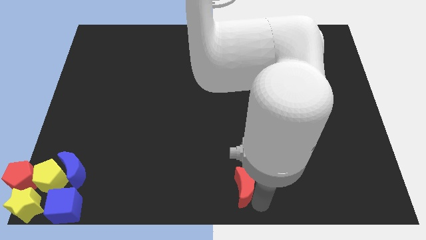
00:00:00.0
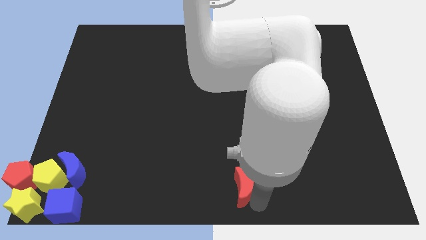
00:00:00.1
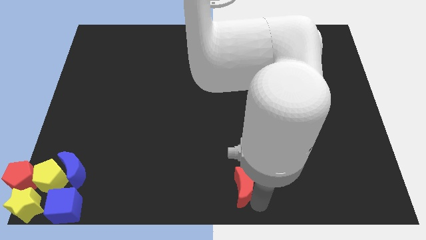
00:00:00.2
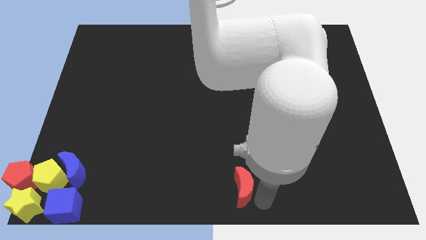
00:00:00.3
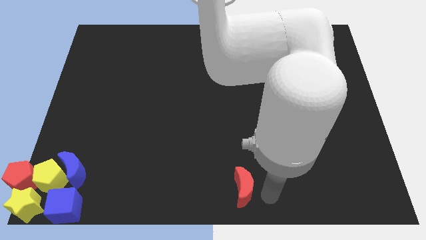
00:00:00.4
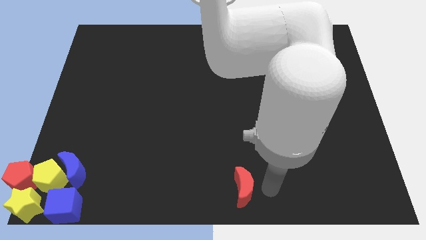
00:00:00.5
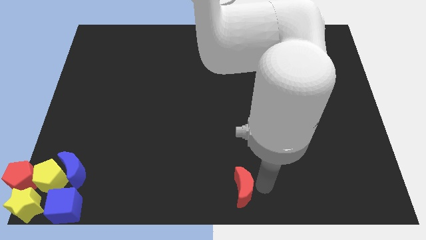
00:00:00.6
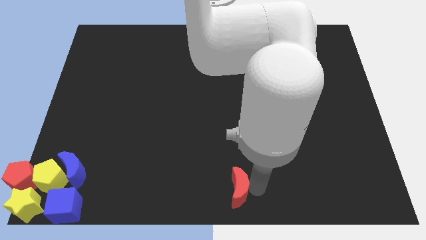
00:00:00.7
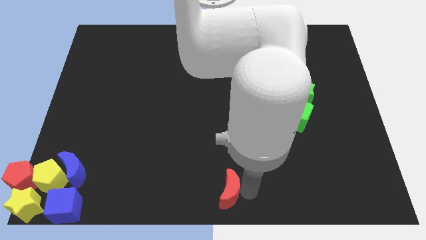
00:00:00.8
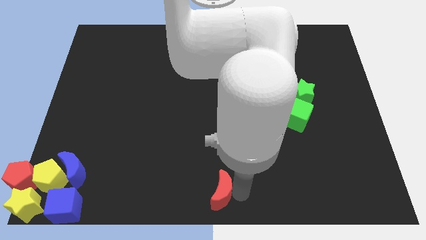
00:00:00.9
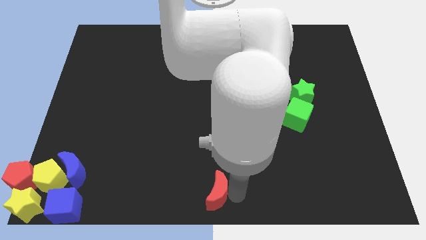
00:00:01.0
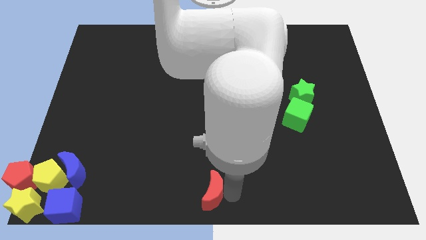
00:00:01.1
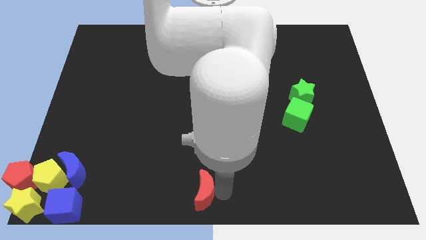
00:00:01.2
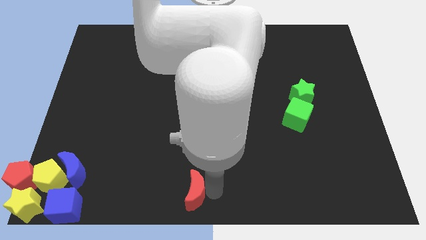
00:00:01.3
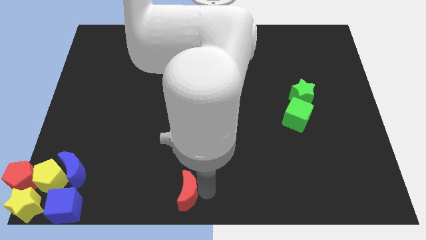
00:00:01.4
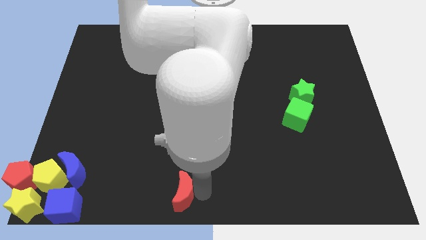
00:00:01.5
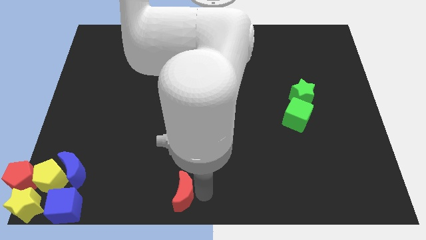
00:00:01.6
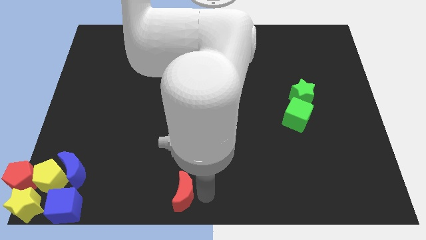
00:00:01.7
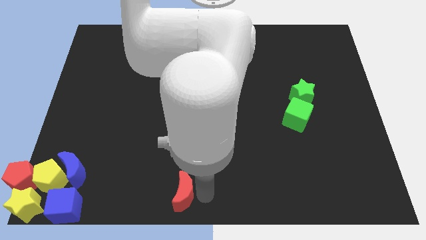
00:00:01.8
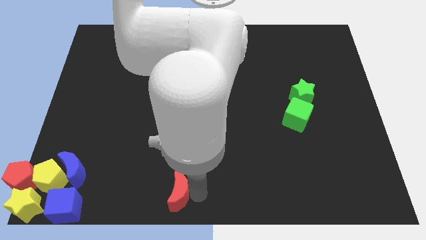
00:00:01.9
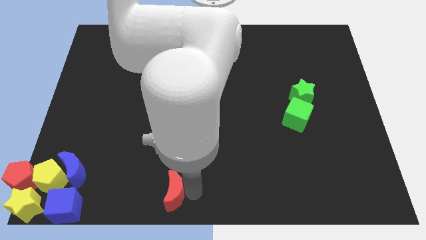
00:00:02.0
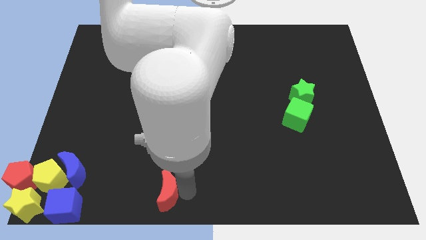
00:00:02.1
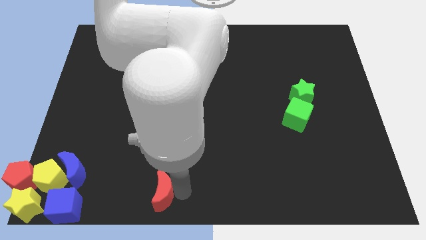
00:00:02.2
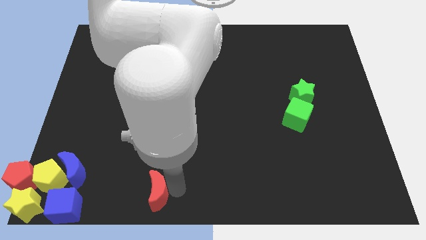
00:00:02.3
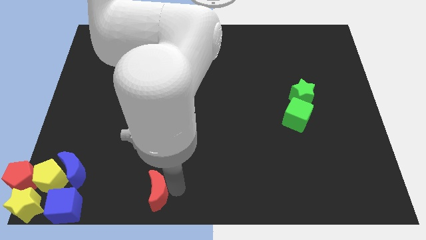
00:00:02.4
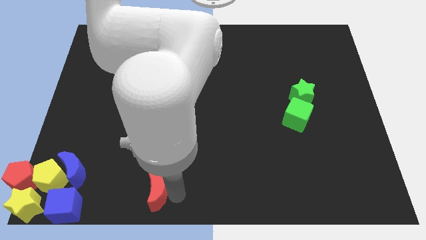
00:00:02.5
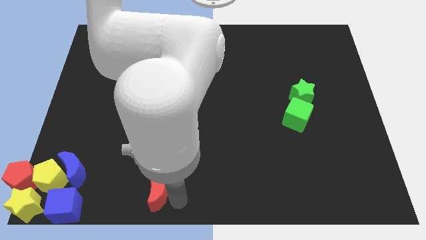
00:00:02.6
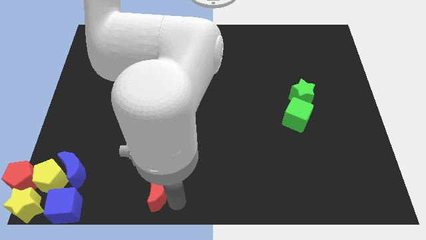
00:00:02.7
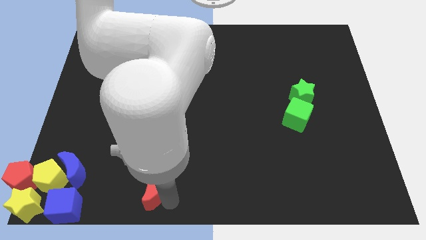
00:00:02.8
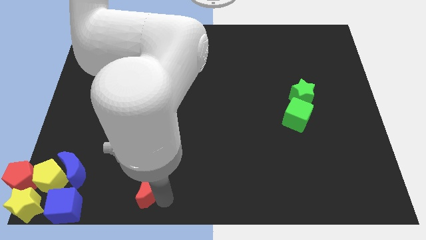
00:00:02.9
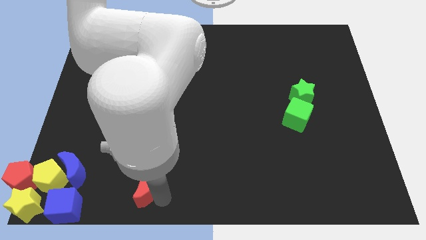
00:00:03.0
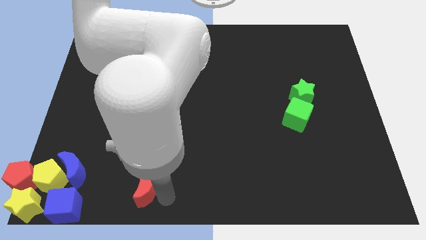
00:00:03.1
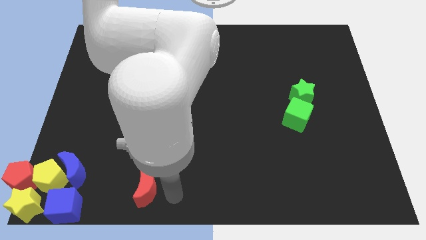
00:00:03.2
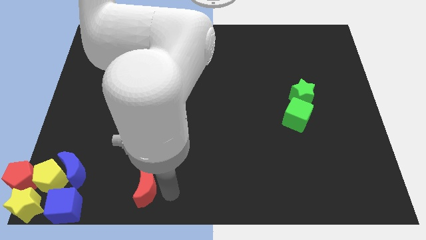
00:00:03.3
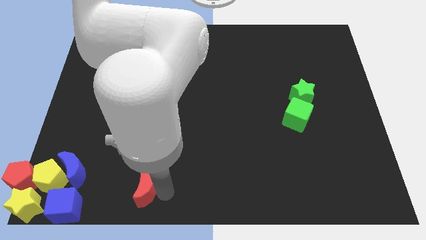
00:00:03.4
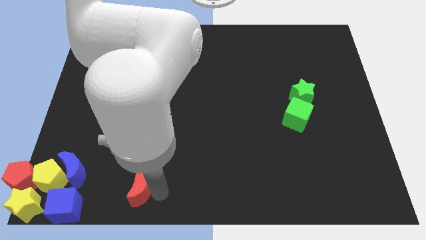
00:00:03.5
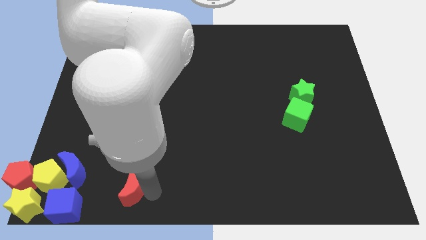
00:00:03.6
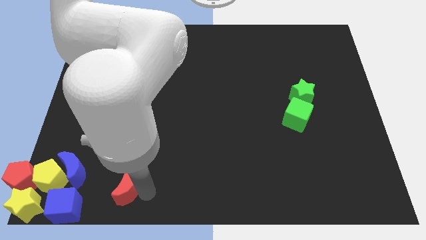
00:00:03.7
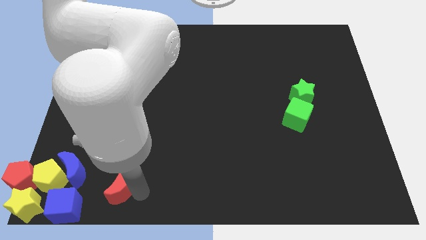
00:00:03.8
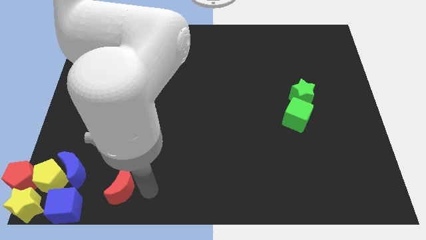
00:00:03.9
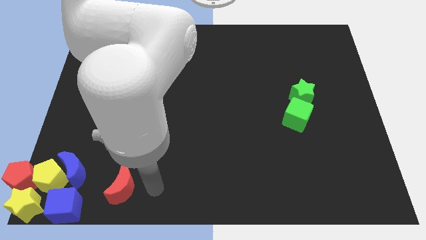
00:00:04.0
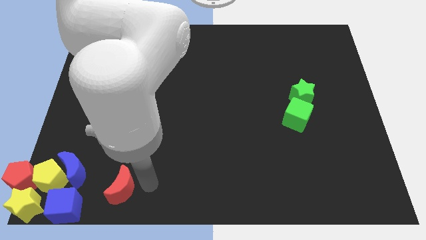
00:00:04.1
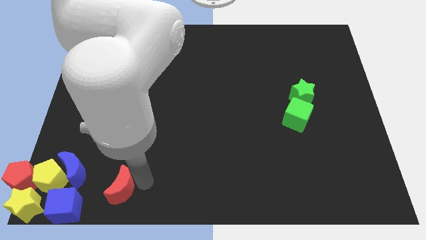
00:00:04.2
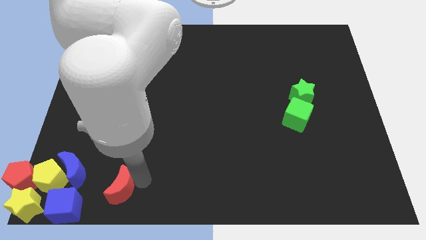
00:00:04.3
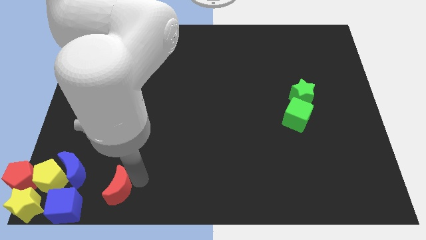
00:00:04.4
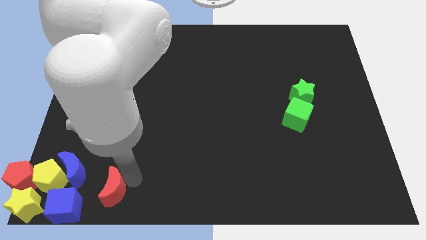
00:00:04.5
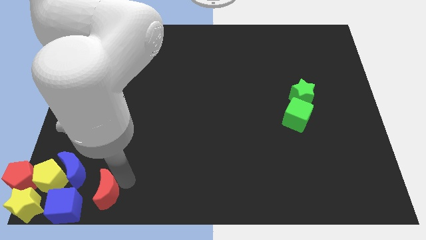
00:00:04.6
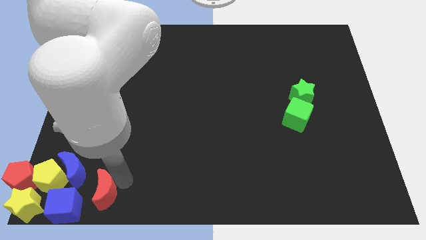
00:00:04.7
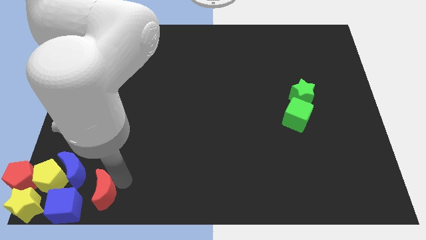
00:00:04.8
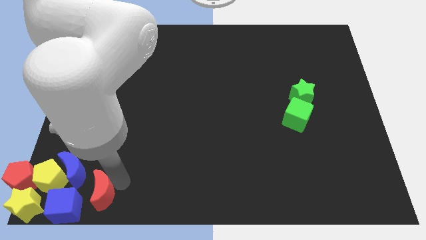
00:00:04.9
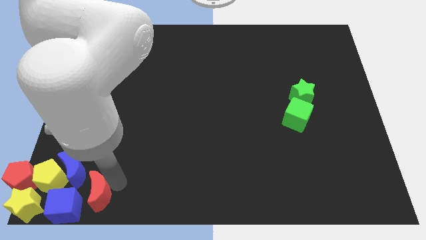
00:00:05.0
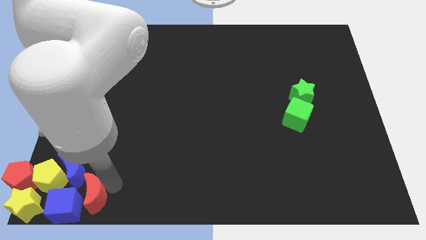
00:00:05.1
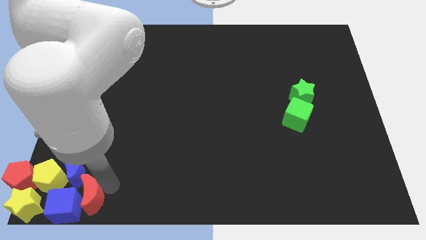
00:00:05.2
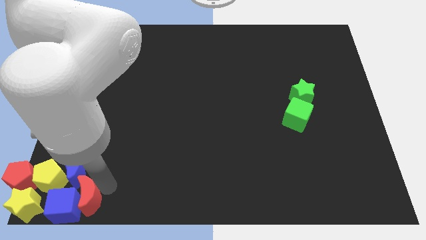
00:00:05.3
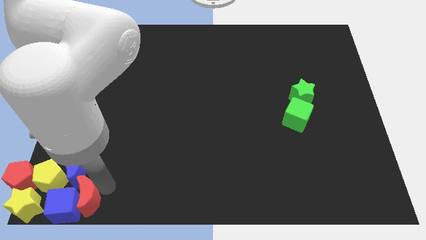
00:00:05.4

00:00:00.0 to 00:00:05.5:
push the red crescent to the right of the blue cube

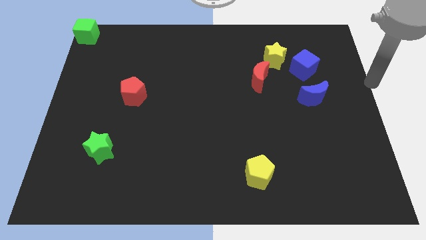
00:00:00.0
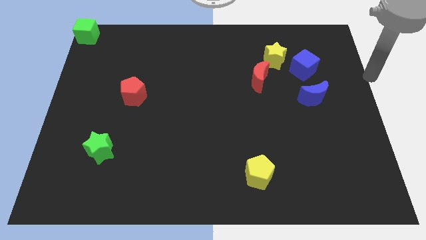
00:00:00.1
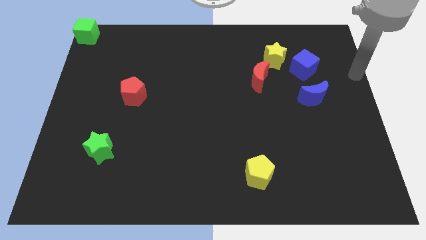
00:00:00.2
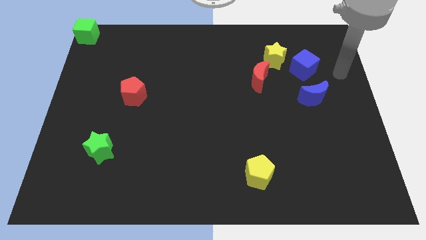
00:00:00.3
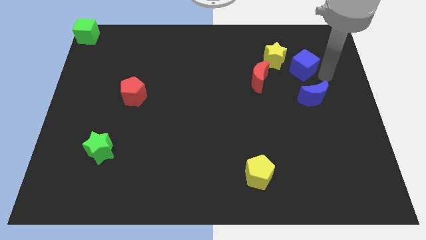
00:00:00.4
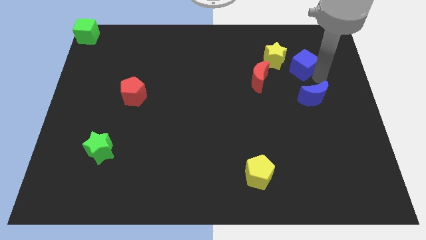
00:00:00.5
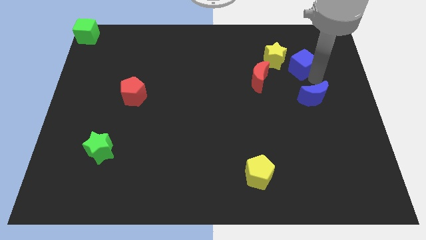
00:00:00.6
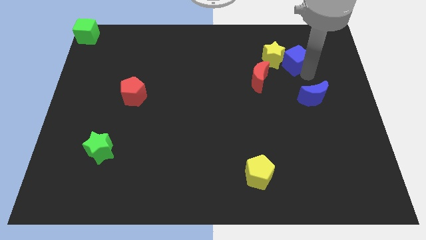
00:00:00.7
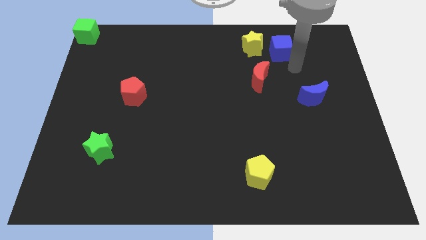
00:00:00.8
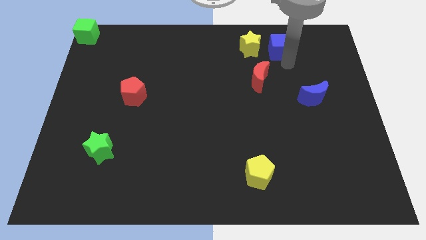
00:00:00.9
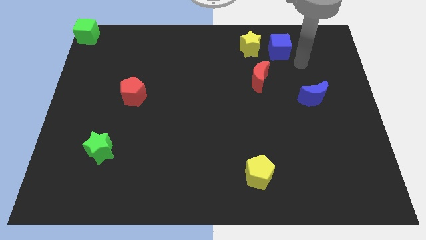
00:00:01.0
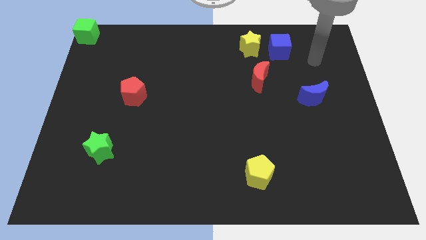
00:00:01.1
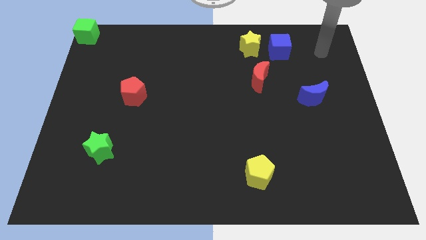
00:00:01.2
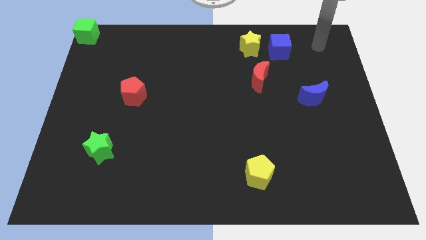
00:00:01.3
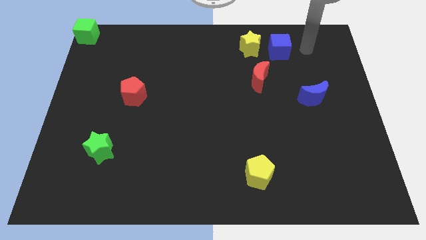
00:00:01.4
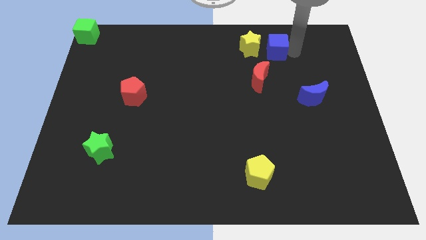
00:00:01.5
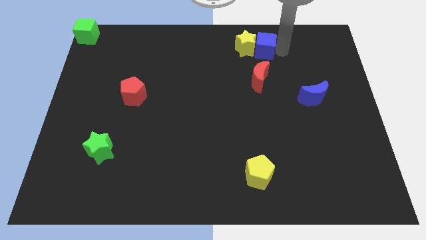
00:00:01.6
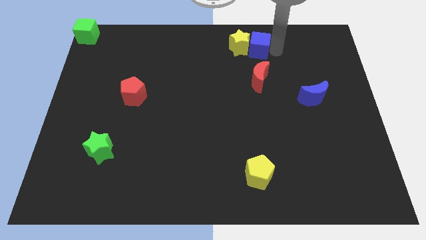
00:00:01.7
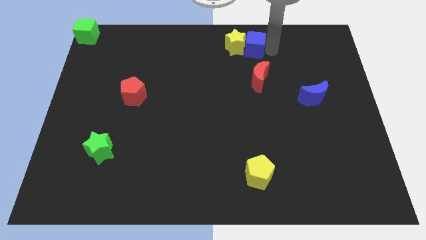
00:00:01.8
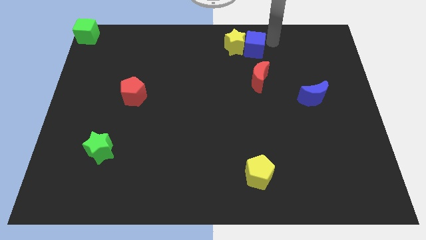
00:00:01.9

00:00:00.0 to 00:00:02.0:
push the yellow star with the blue cube

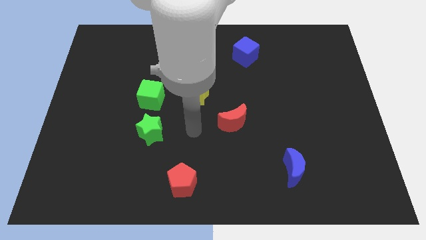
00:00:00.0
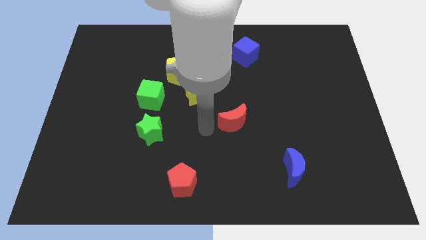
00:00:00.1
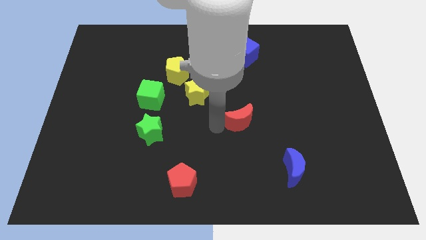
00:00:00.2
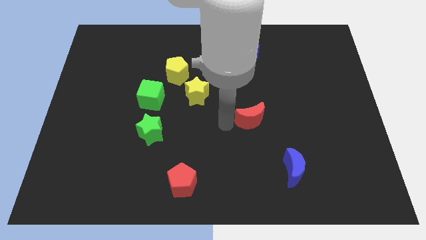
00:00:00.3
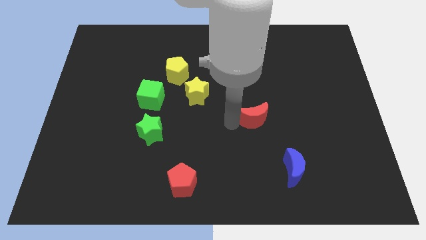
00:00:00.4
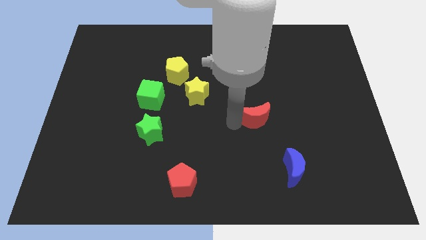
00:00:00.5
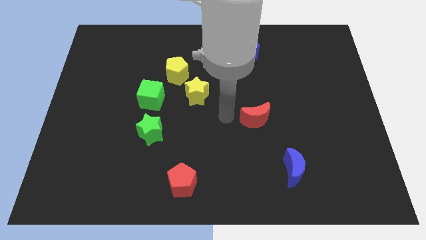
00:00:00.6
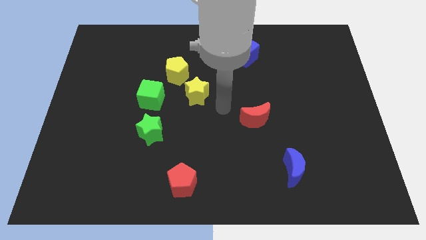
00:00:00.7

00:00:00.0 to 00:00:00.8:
move the red crescent to the right

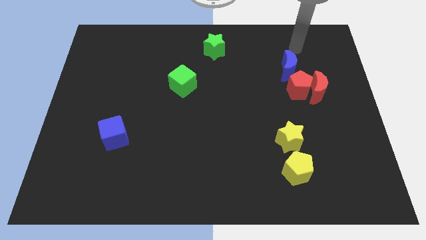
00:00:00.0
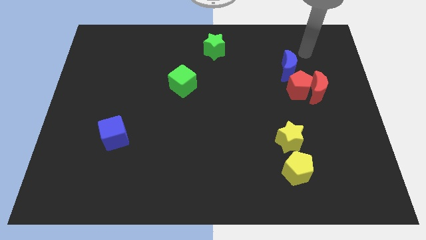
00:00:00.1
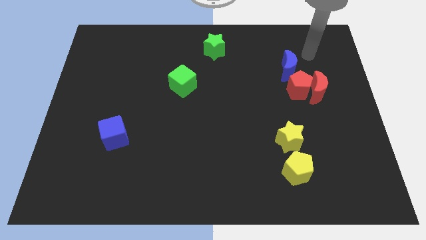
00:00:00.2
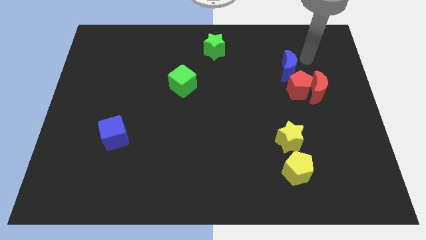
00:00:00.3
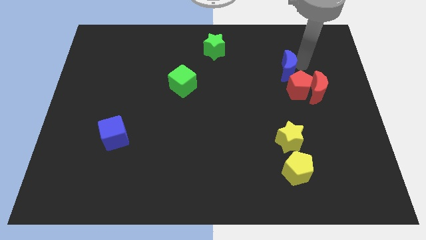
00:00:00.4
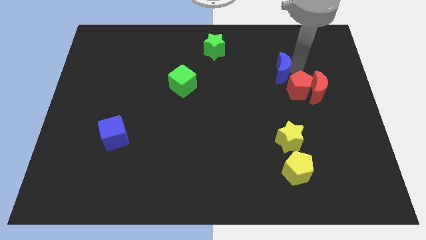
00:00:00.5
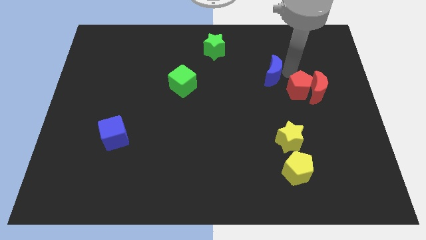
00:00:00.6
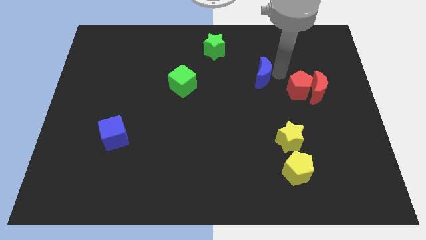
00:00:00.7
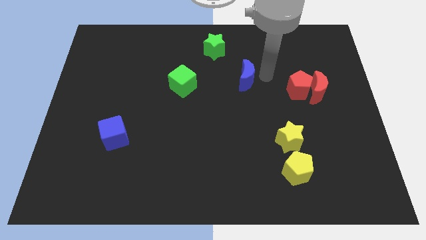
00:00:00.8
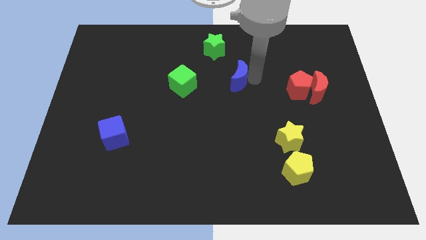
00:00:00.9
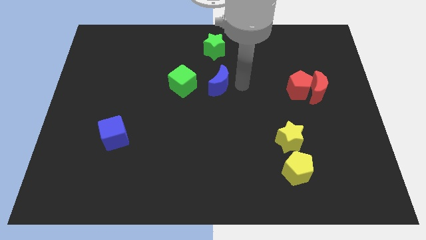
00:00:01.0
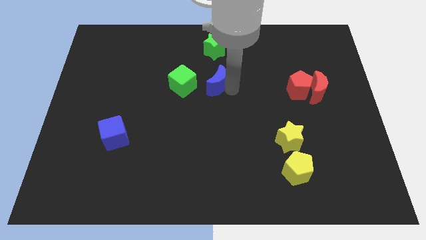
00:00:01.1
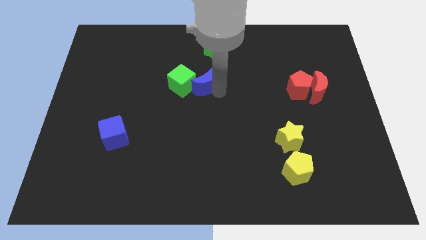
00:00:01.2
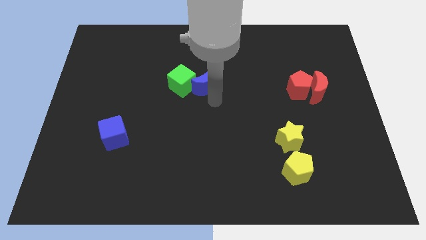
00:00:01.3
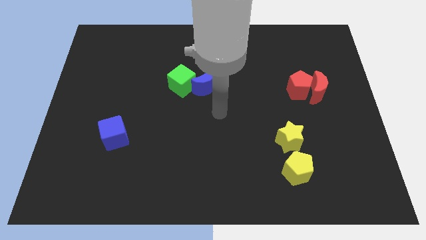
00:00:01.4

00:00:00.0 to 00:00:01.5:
move the blue crescent away from the red pentagon
